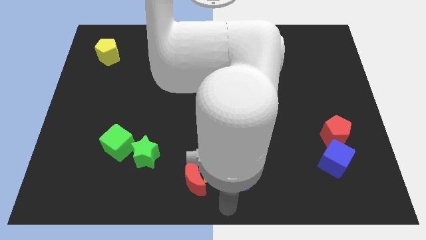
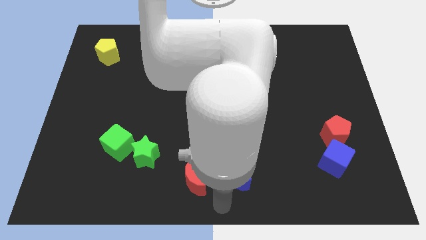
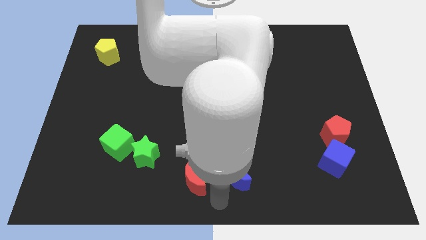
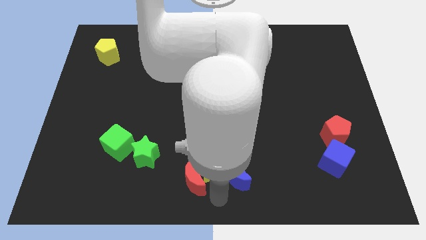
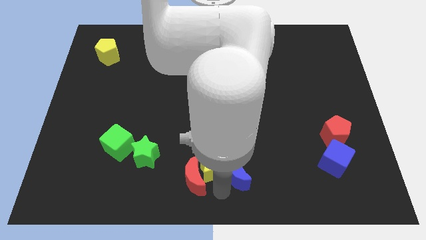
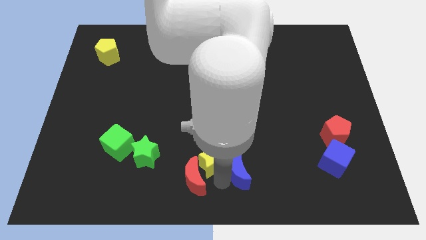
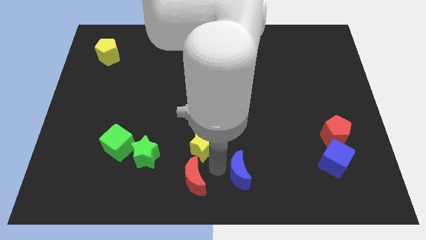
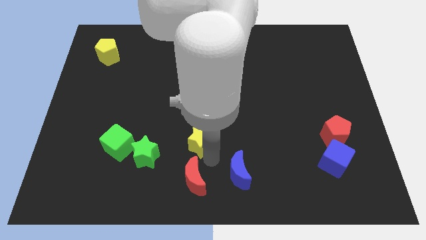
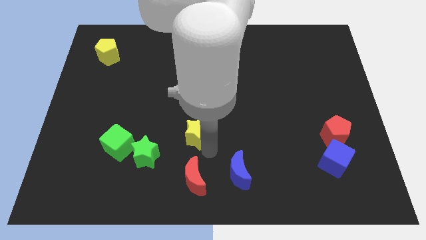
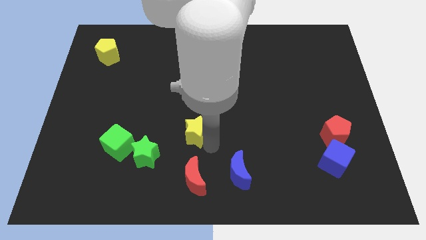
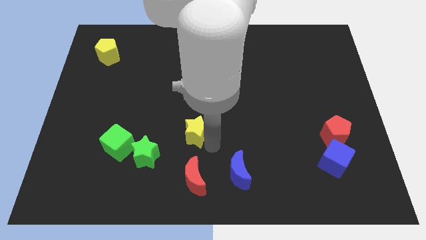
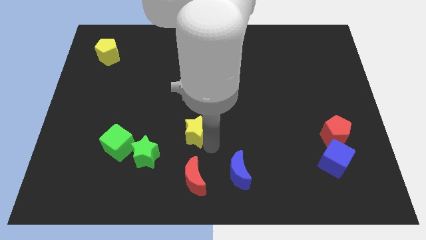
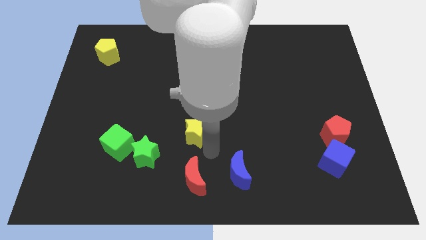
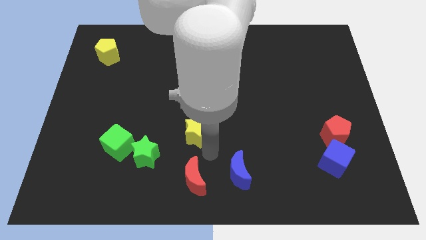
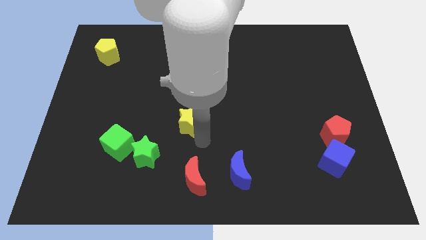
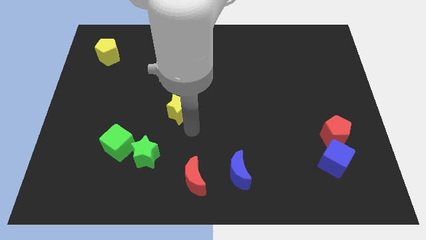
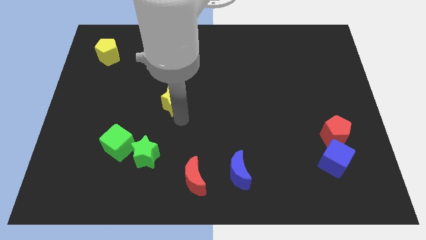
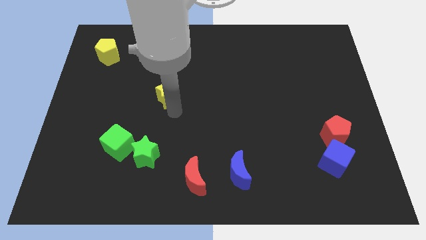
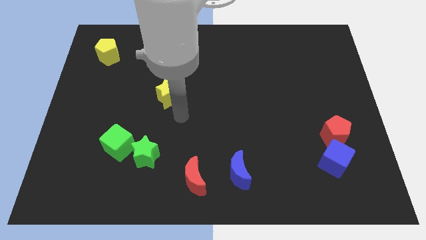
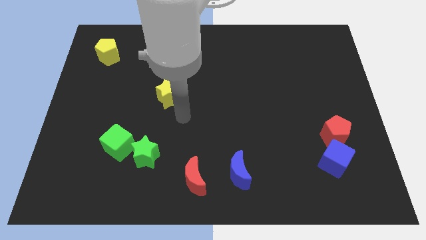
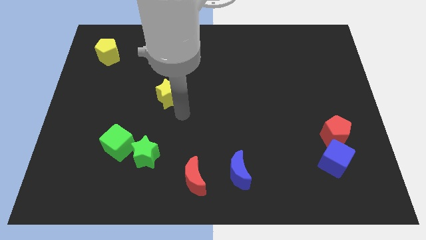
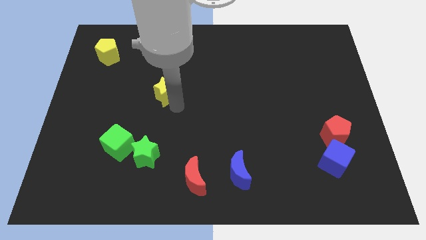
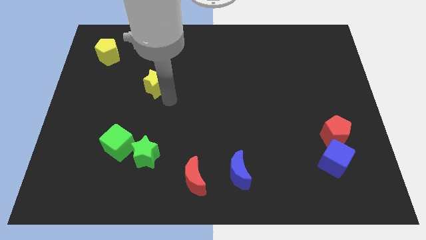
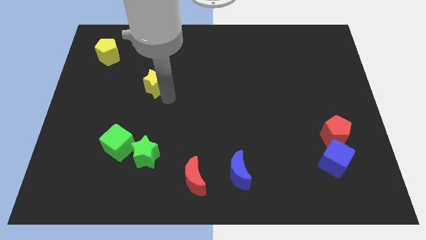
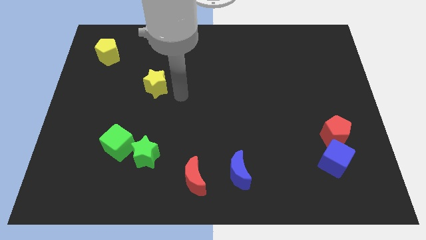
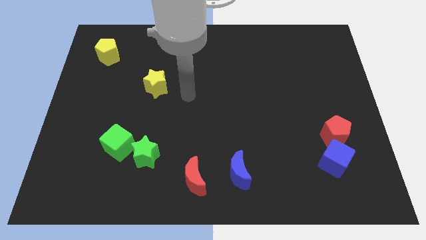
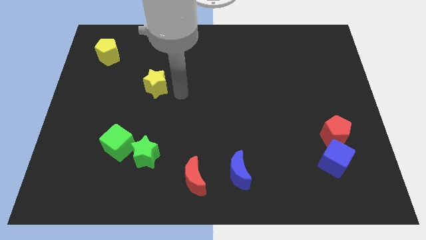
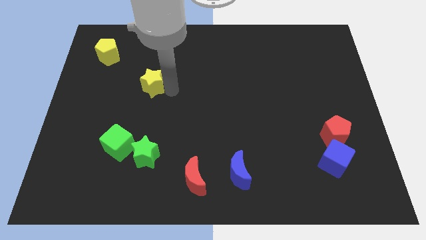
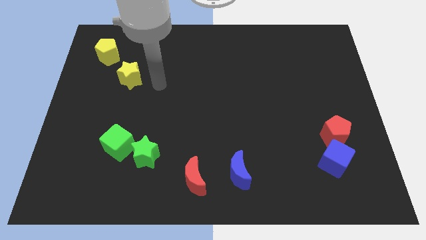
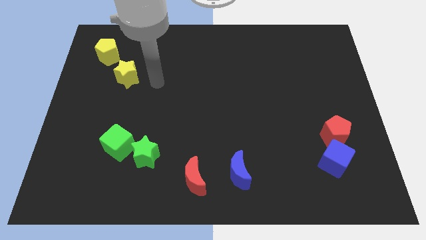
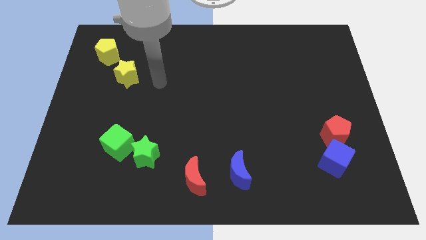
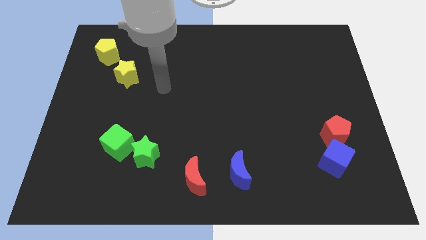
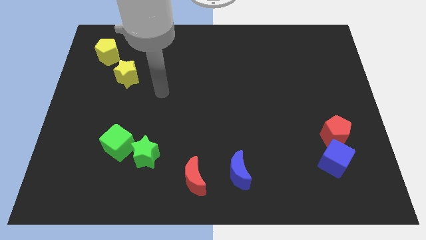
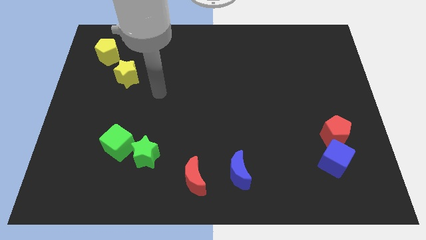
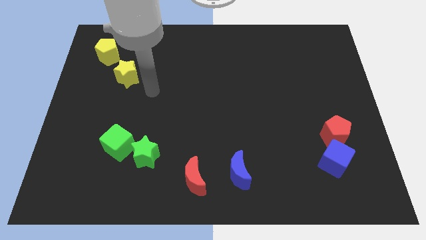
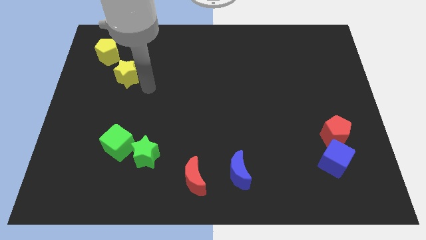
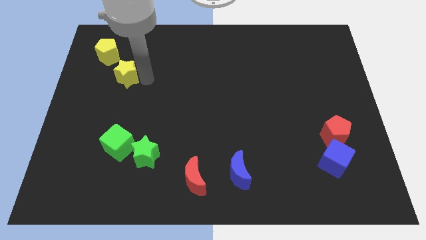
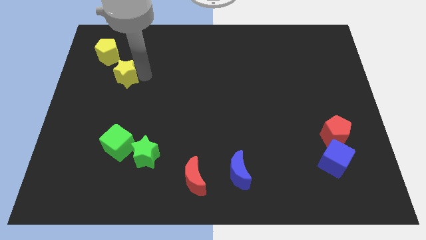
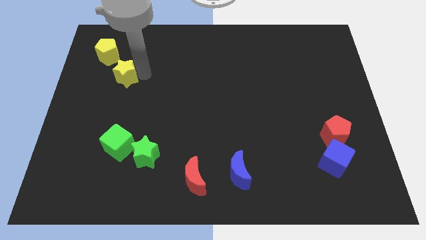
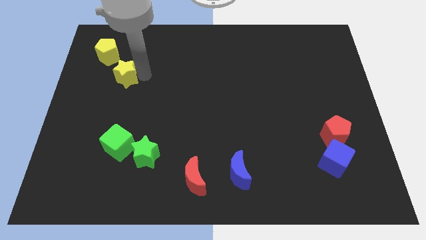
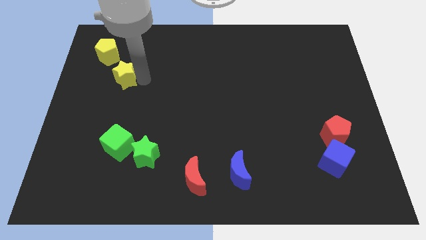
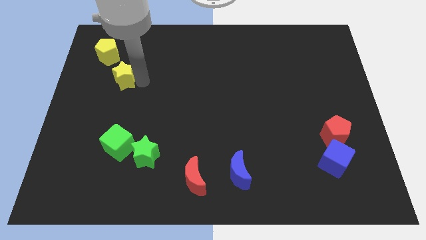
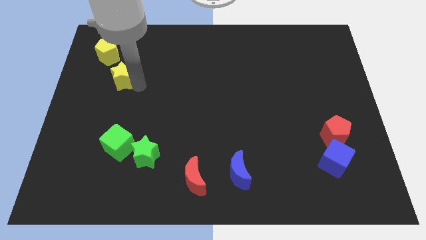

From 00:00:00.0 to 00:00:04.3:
push the yellow star diagonal bottom right to the yellow pentagon

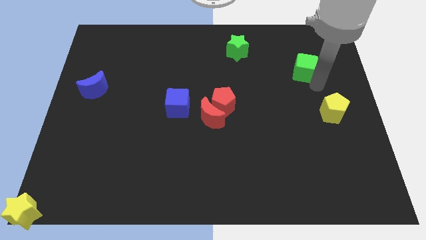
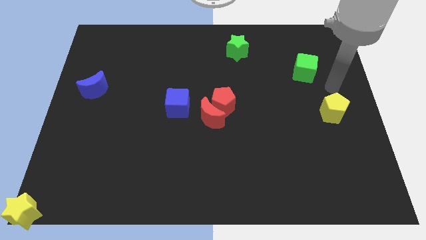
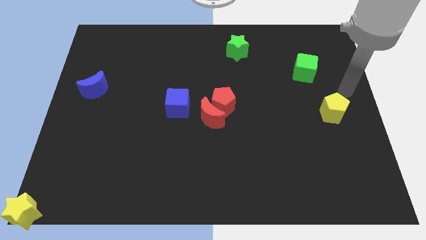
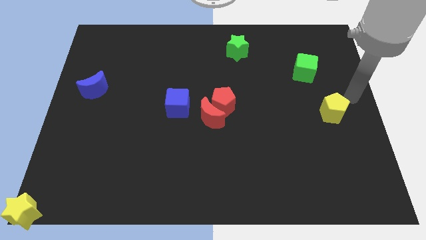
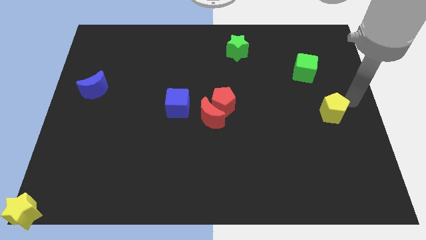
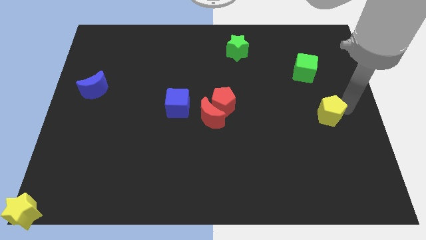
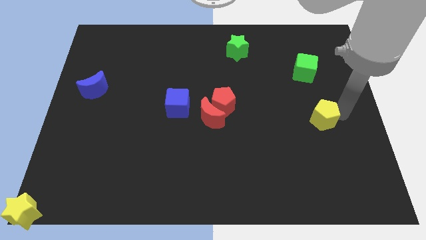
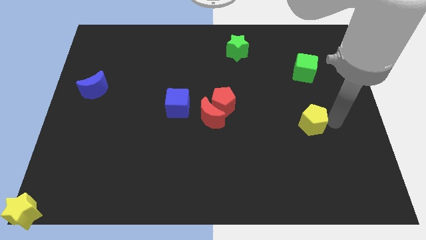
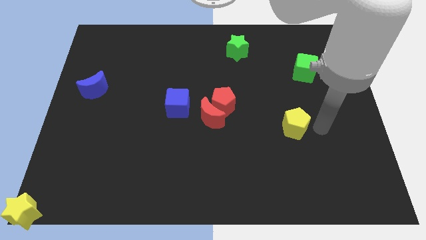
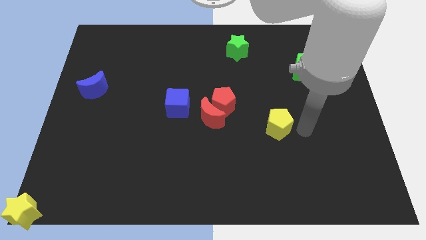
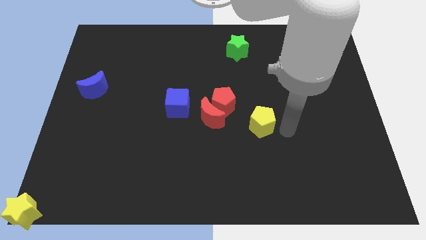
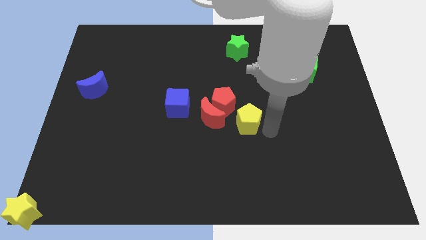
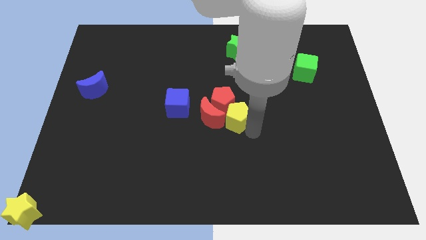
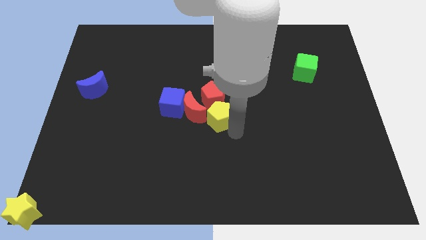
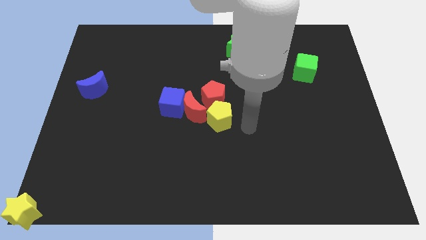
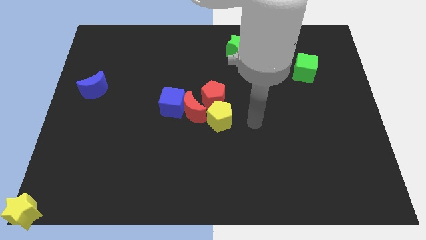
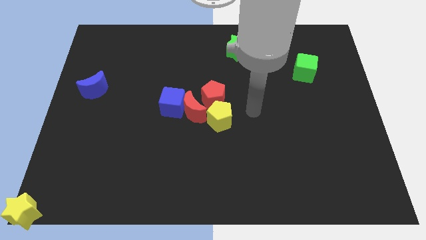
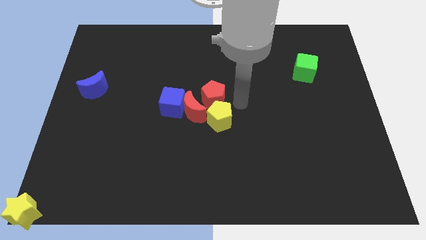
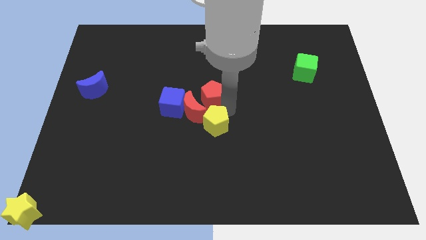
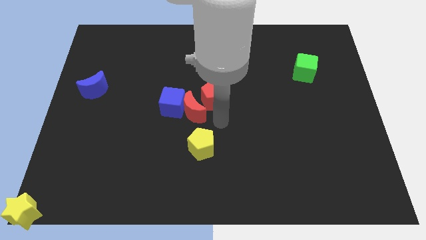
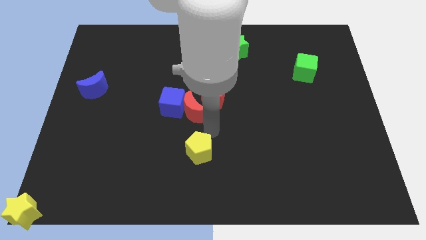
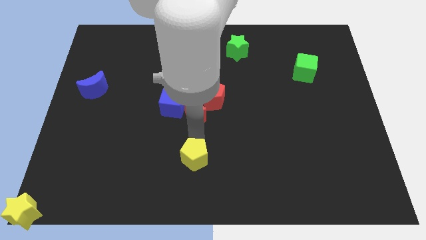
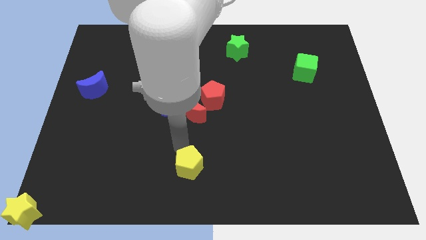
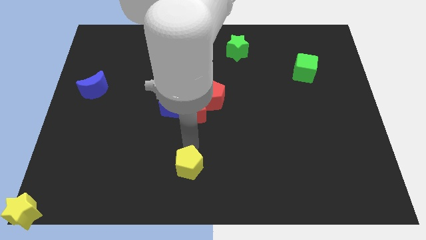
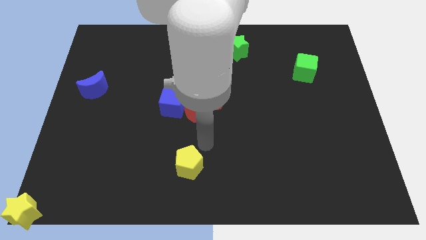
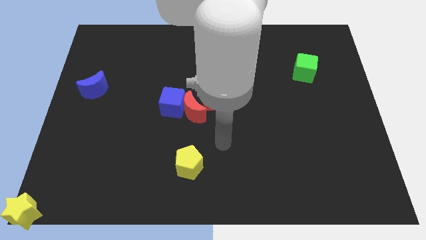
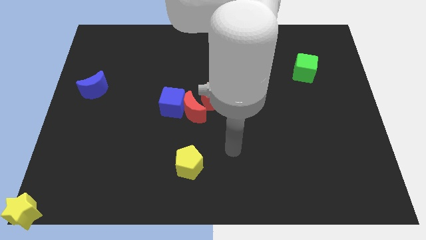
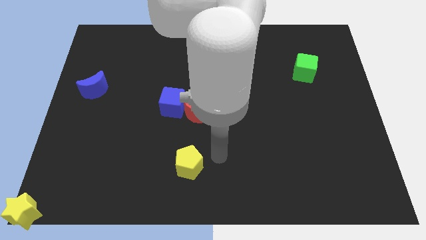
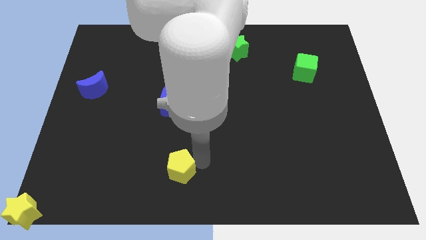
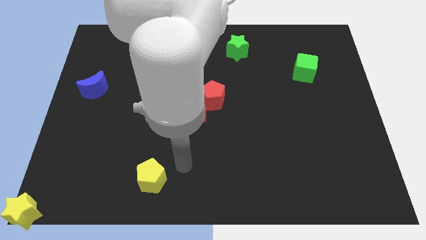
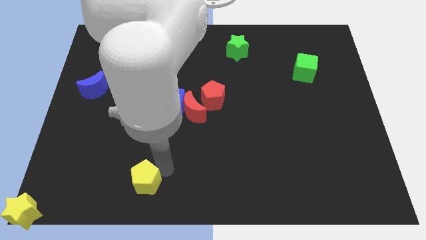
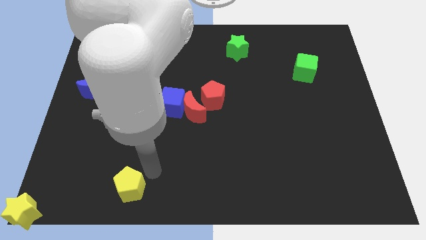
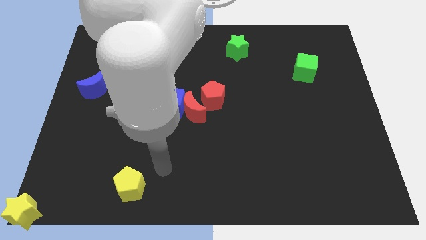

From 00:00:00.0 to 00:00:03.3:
slide the yellow pentagon towards the yellow star

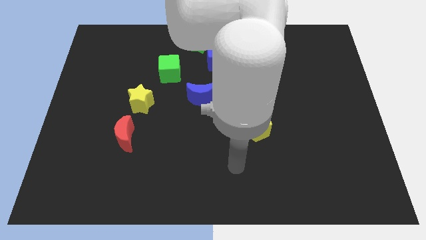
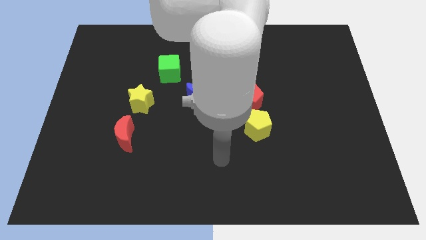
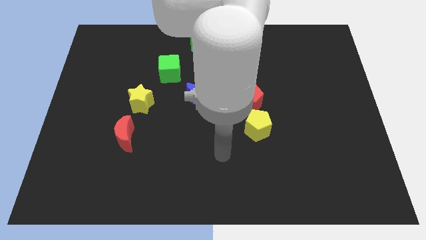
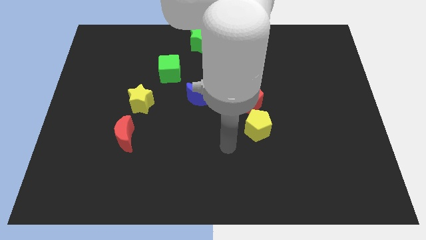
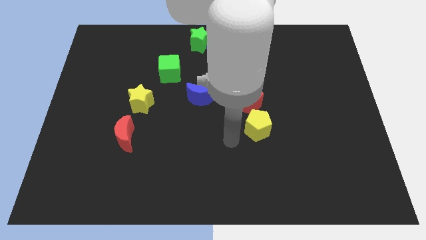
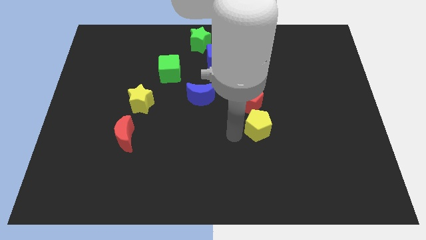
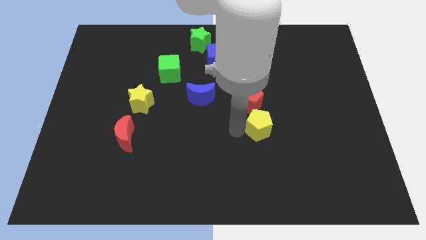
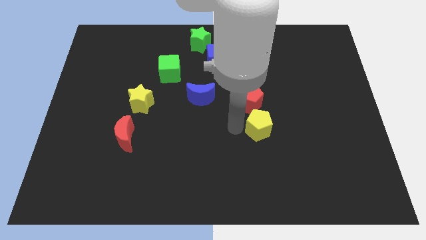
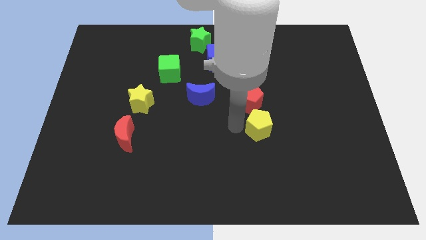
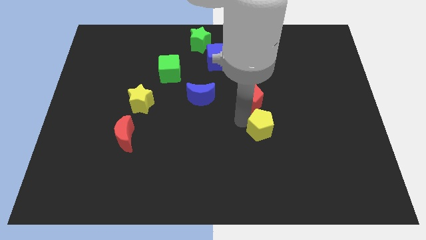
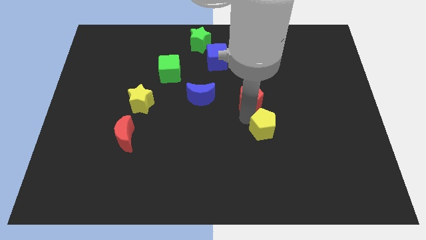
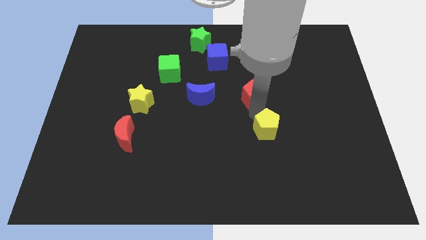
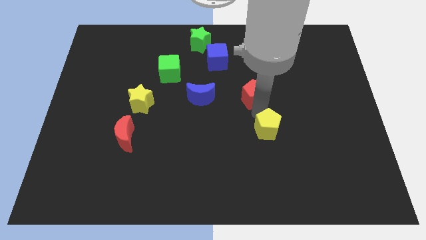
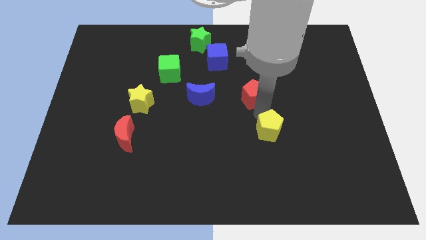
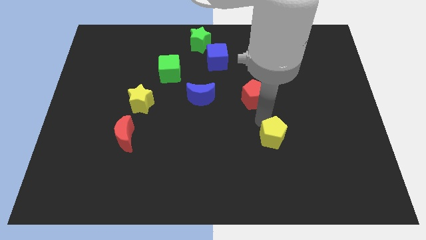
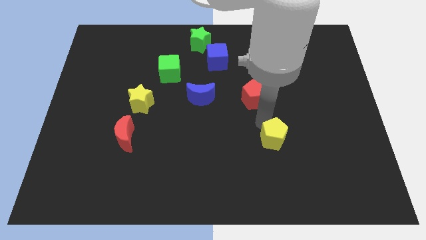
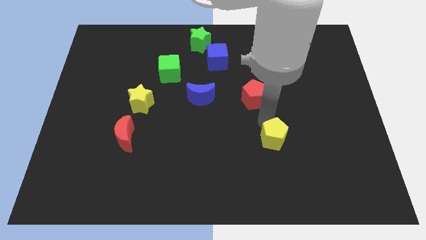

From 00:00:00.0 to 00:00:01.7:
place yellow pentagon below the red pentagon
